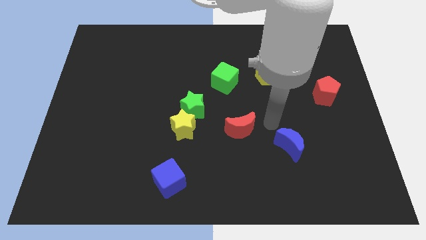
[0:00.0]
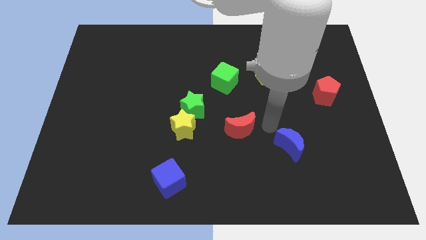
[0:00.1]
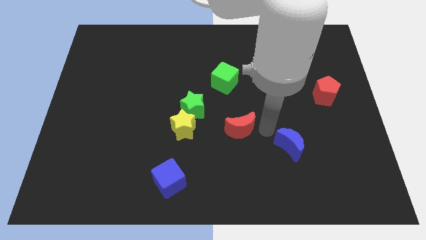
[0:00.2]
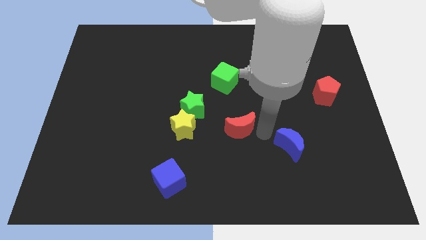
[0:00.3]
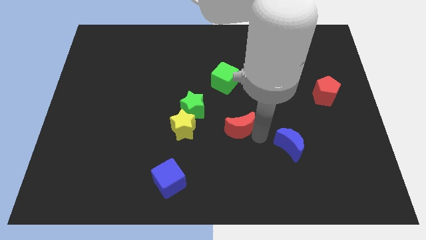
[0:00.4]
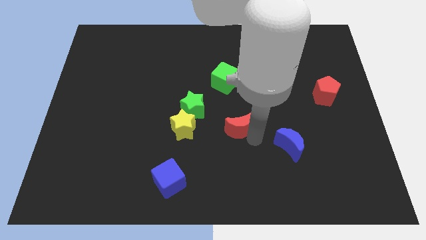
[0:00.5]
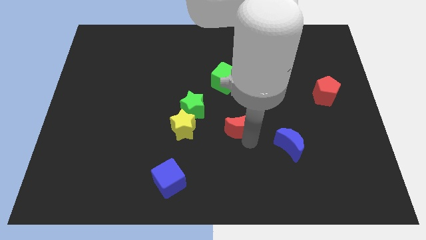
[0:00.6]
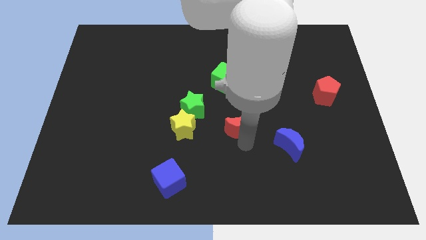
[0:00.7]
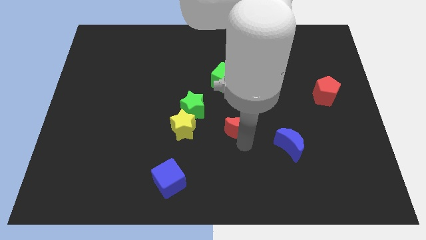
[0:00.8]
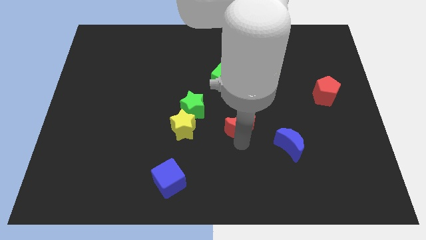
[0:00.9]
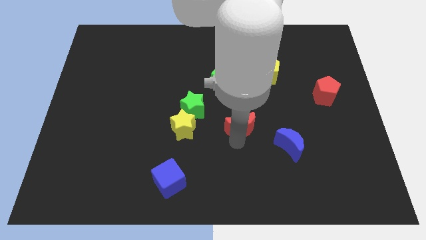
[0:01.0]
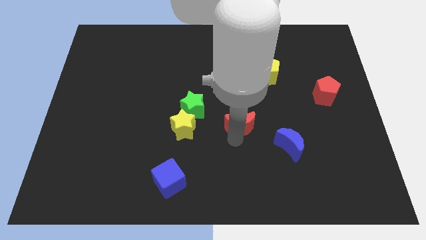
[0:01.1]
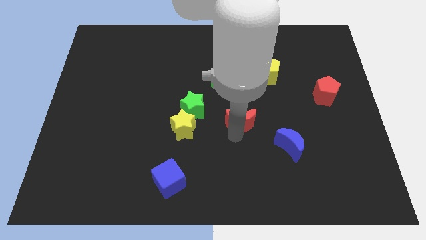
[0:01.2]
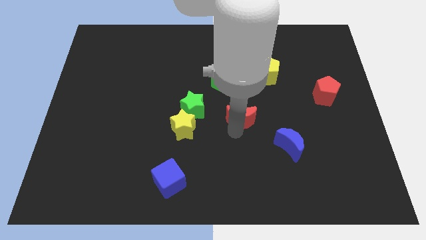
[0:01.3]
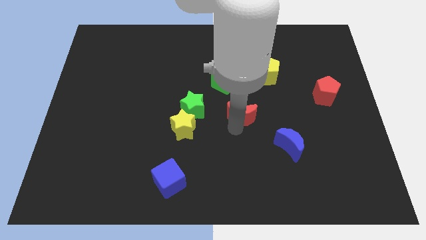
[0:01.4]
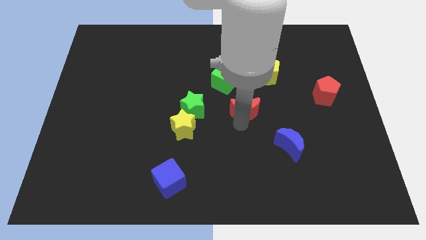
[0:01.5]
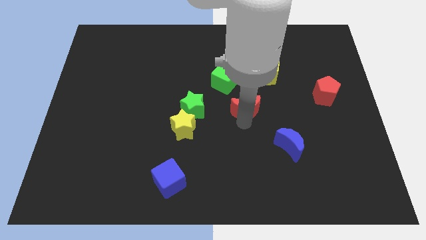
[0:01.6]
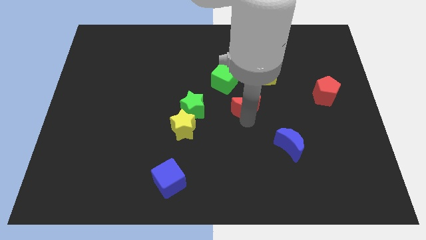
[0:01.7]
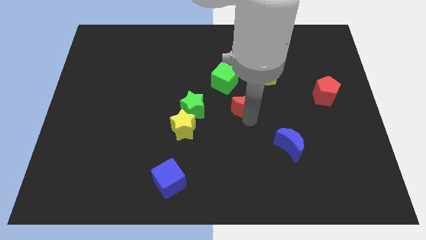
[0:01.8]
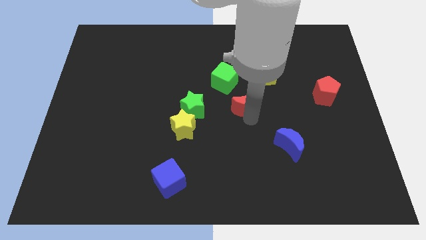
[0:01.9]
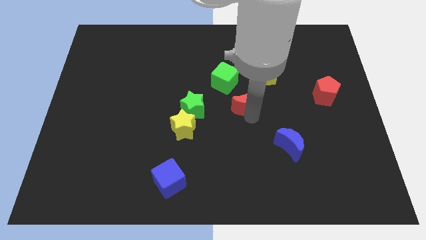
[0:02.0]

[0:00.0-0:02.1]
push the red moon slightly to the top of the board

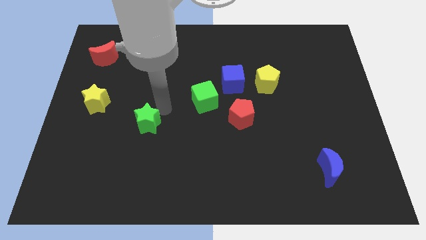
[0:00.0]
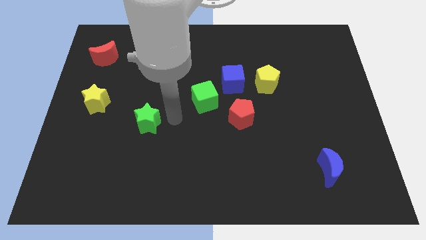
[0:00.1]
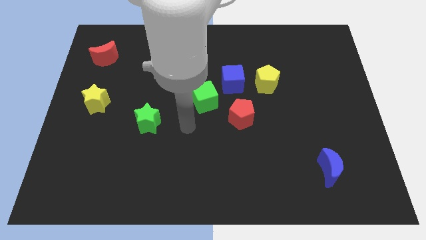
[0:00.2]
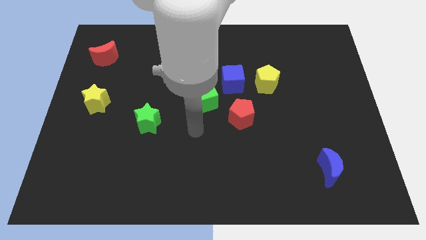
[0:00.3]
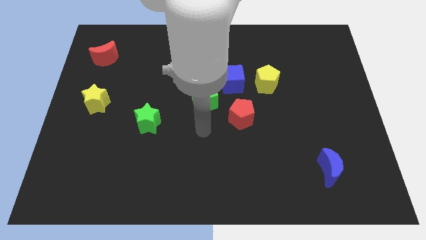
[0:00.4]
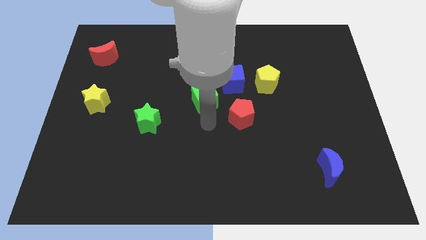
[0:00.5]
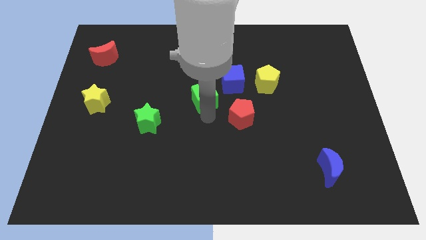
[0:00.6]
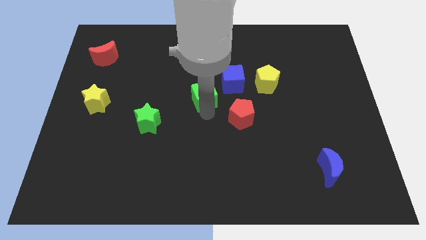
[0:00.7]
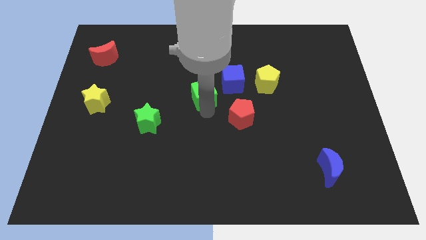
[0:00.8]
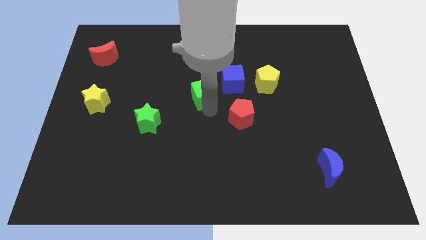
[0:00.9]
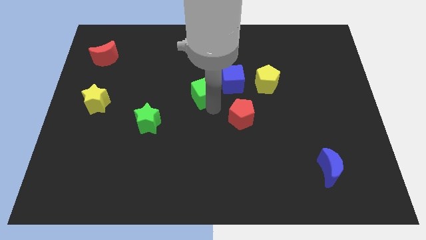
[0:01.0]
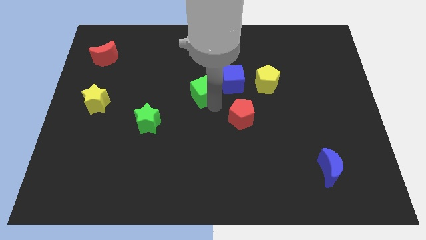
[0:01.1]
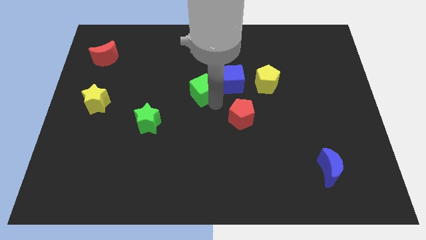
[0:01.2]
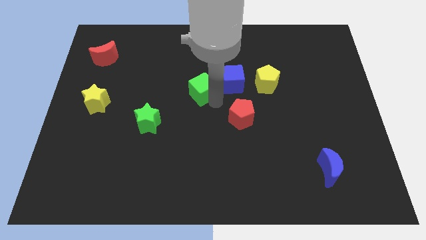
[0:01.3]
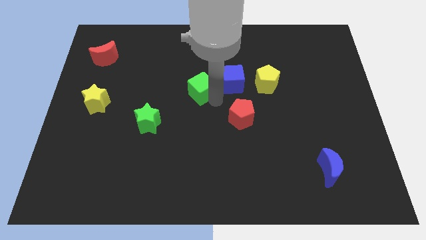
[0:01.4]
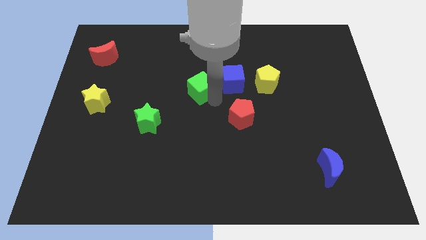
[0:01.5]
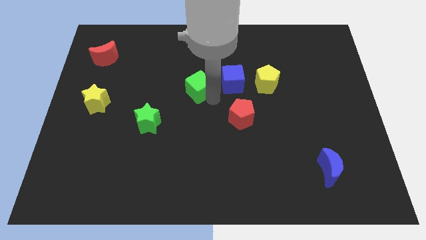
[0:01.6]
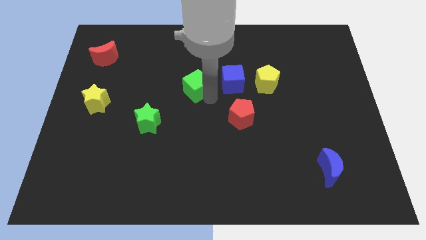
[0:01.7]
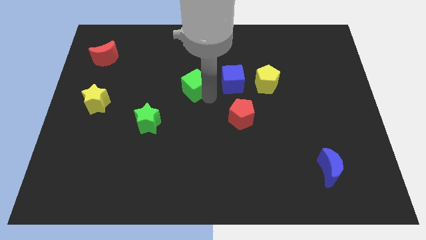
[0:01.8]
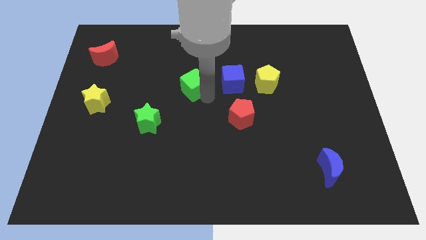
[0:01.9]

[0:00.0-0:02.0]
put the green cube to the left of blue cube

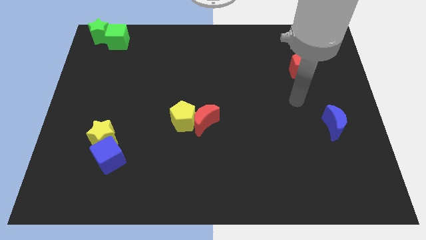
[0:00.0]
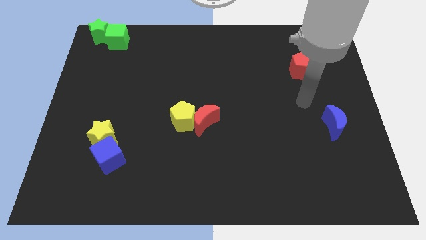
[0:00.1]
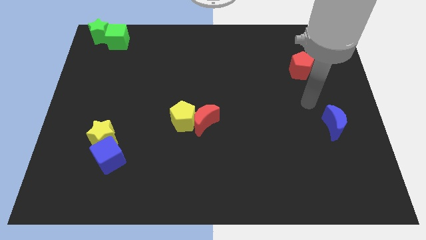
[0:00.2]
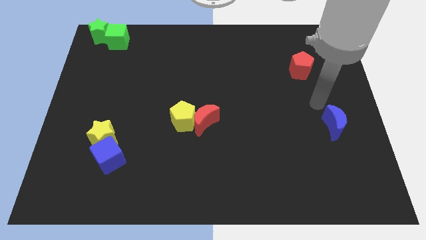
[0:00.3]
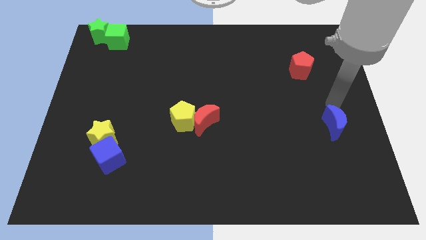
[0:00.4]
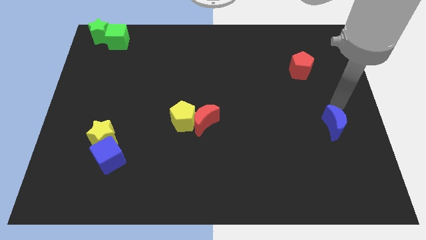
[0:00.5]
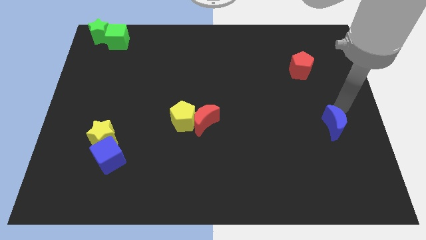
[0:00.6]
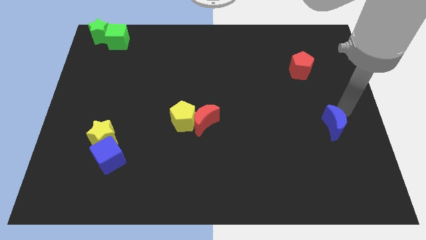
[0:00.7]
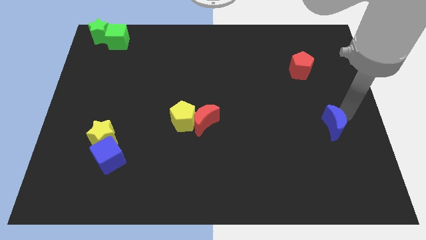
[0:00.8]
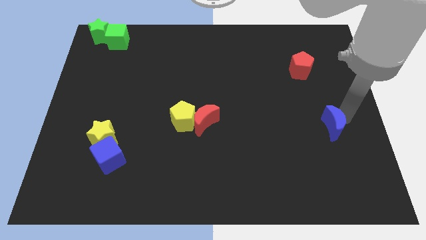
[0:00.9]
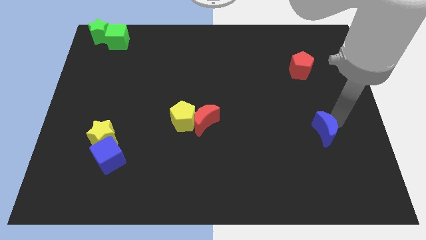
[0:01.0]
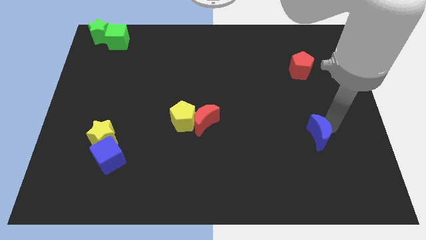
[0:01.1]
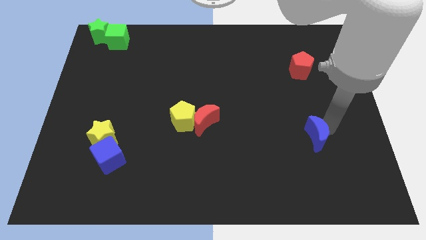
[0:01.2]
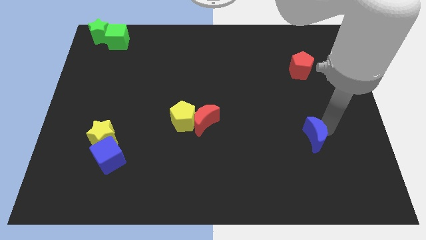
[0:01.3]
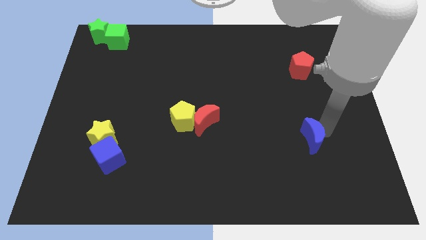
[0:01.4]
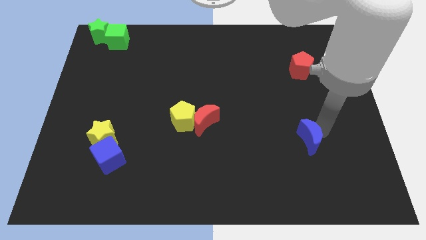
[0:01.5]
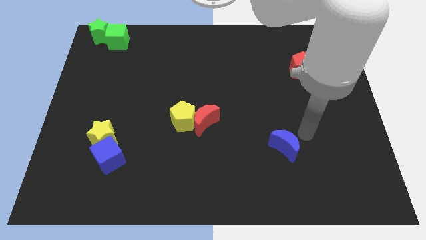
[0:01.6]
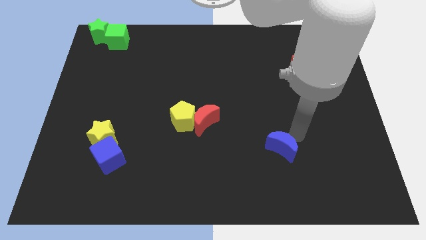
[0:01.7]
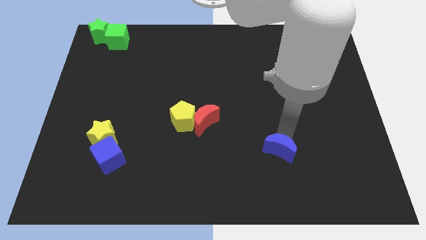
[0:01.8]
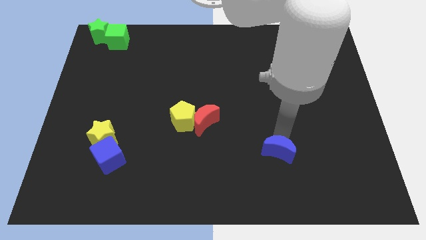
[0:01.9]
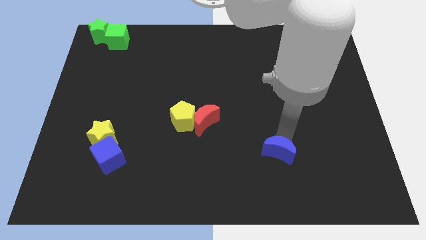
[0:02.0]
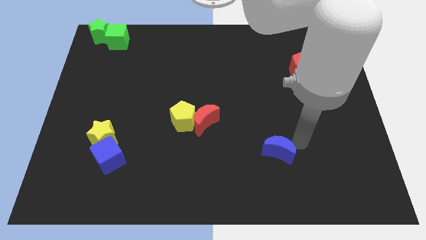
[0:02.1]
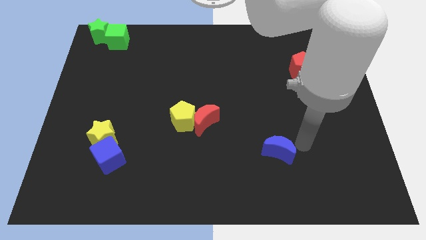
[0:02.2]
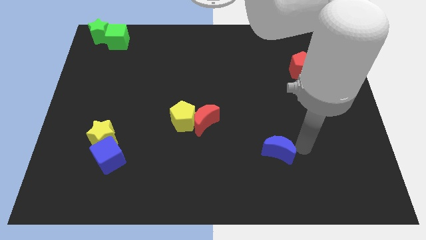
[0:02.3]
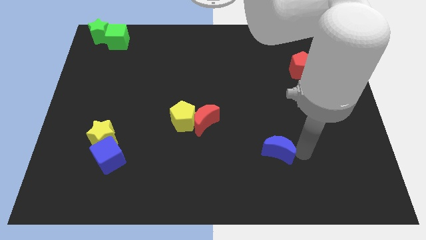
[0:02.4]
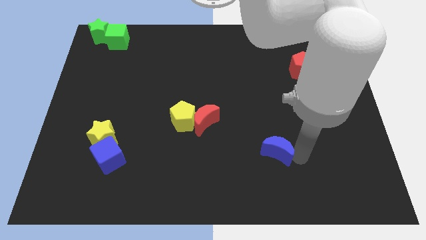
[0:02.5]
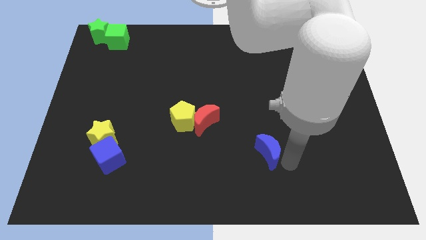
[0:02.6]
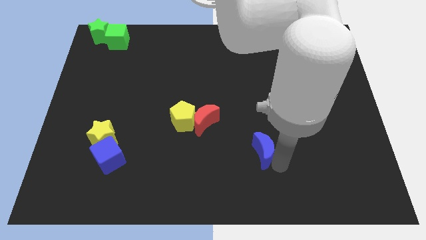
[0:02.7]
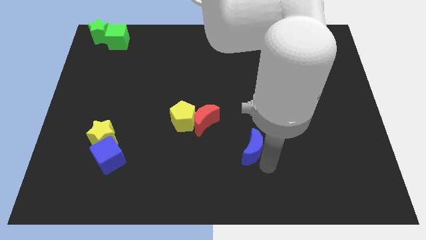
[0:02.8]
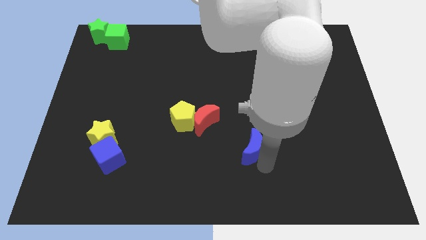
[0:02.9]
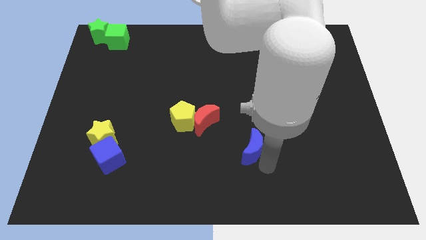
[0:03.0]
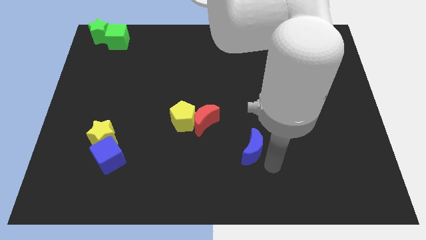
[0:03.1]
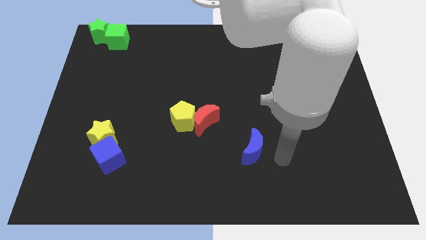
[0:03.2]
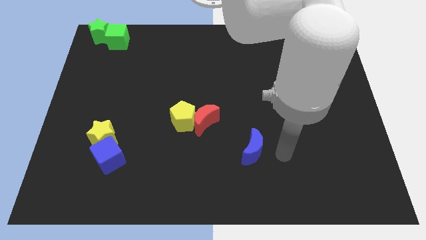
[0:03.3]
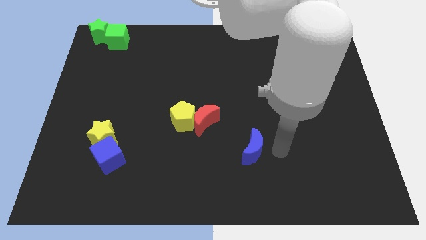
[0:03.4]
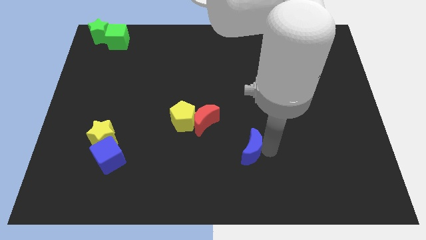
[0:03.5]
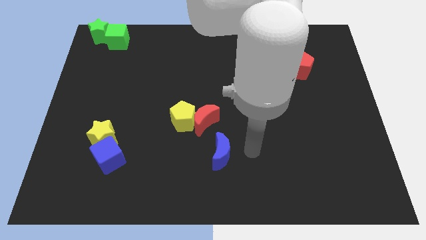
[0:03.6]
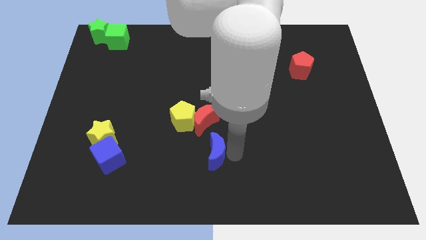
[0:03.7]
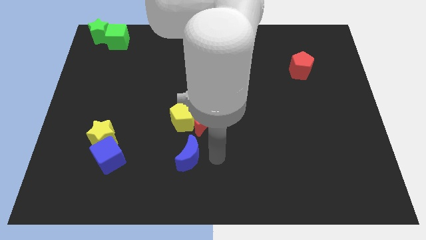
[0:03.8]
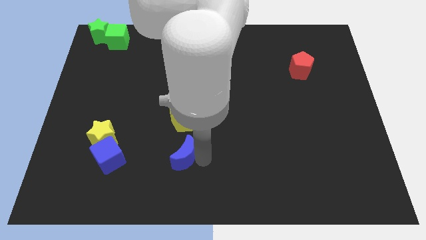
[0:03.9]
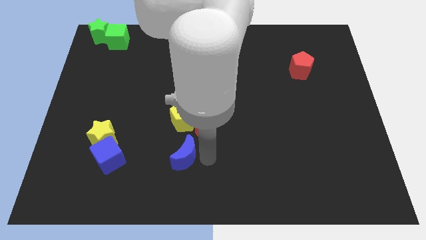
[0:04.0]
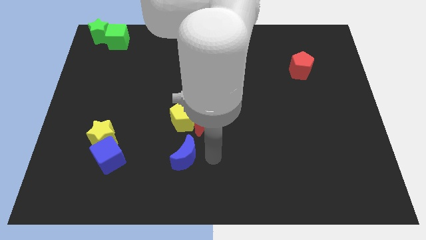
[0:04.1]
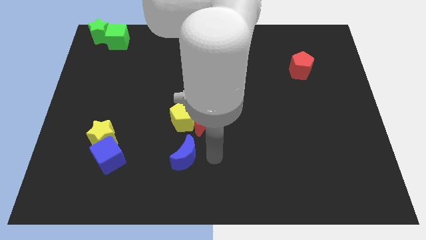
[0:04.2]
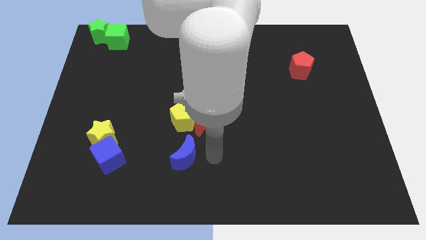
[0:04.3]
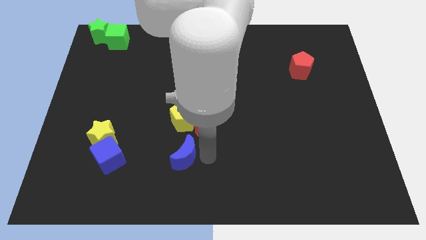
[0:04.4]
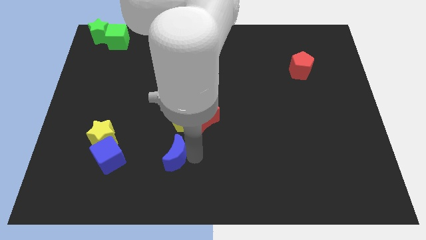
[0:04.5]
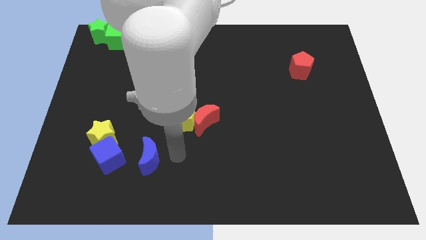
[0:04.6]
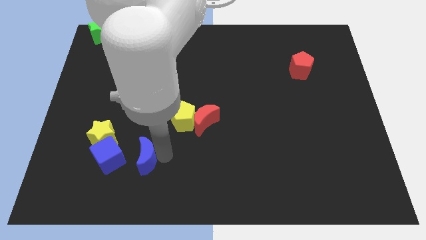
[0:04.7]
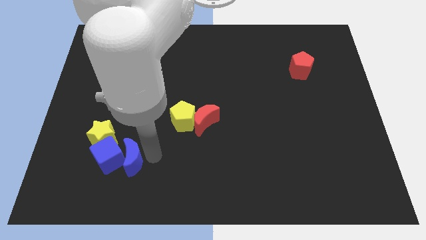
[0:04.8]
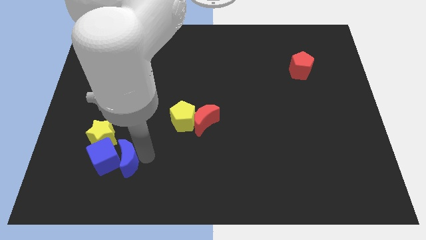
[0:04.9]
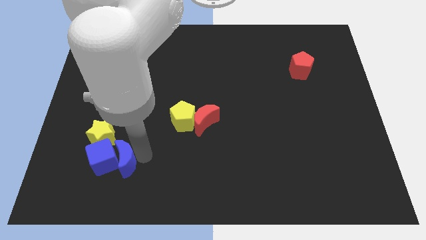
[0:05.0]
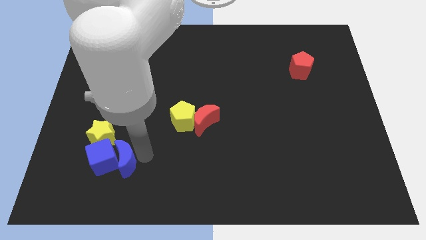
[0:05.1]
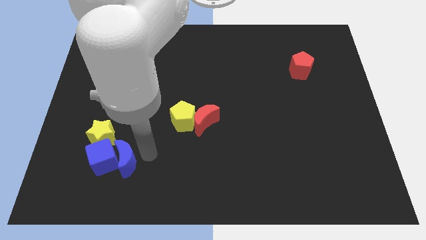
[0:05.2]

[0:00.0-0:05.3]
place blue crescent close to the blue cube
